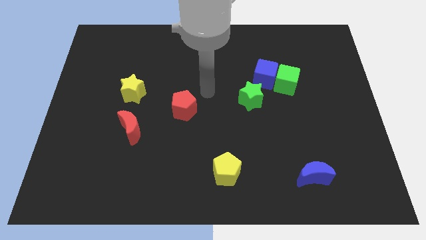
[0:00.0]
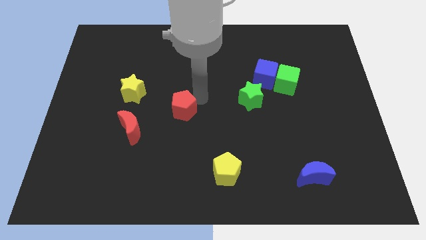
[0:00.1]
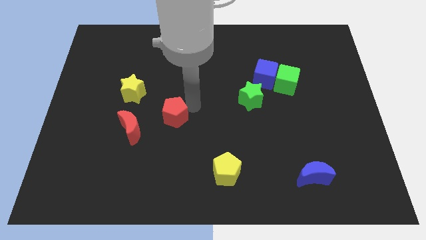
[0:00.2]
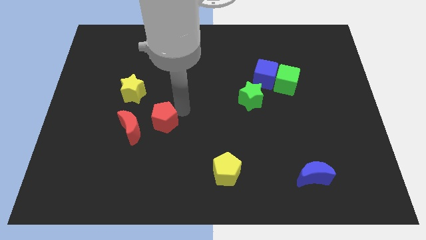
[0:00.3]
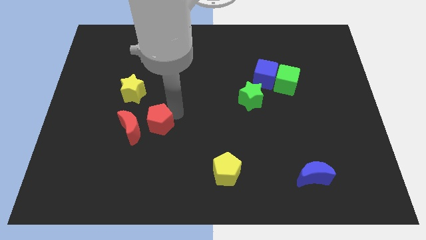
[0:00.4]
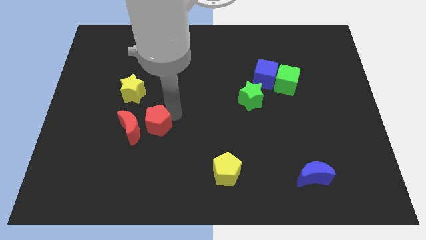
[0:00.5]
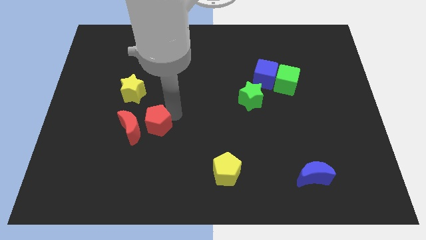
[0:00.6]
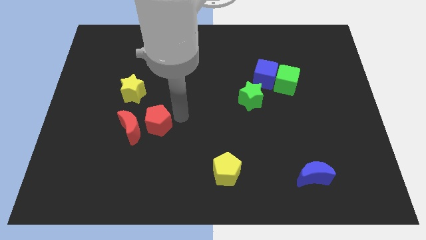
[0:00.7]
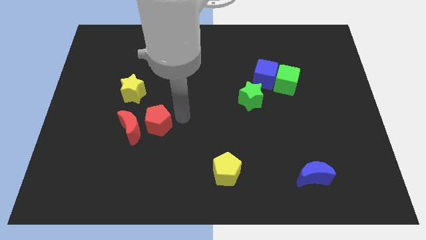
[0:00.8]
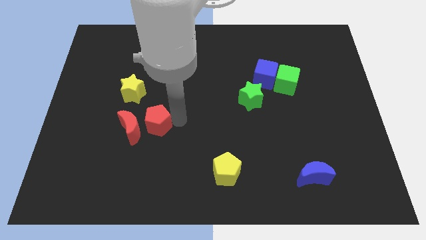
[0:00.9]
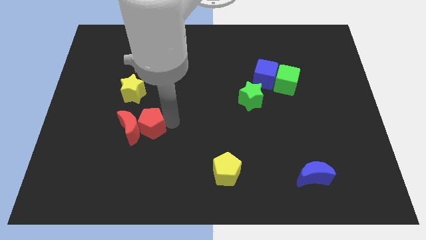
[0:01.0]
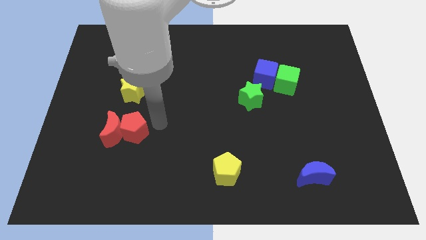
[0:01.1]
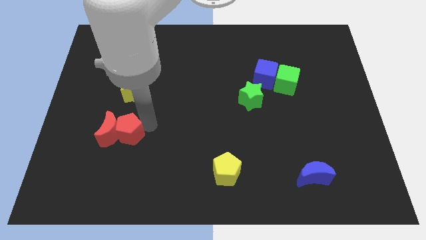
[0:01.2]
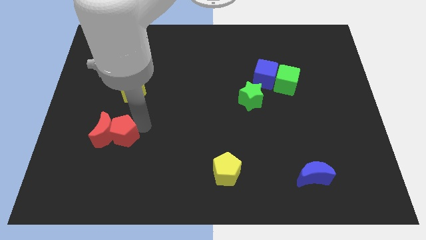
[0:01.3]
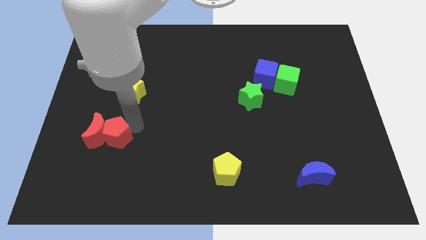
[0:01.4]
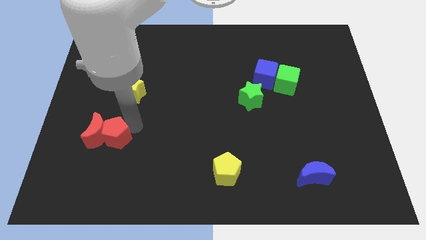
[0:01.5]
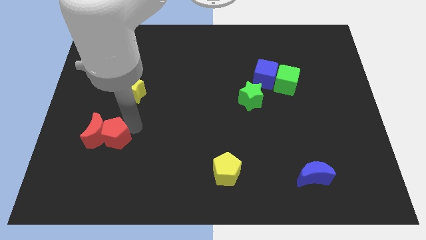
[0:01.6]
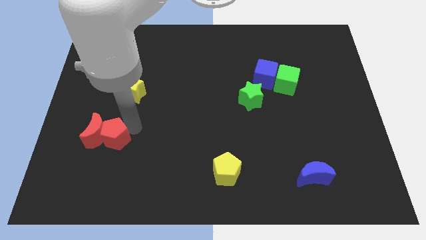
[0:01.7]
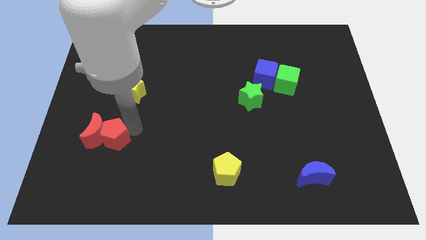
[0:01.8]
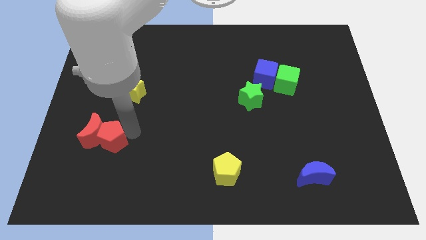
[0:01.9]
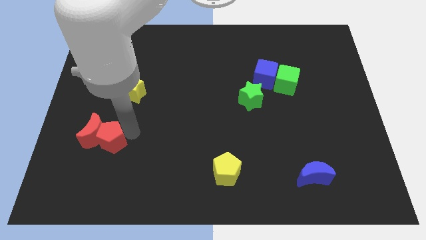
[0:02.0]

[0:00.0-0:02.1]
push the red pentagon into the red moon

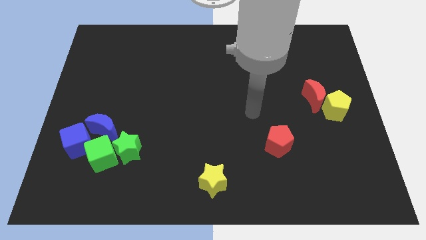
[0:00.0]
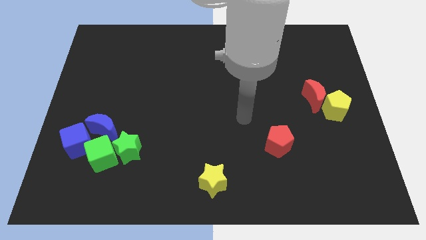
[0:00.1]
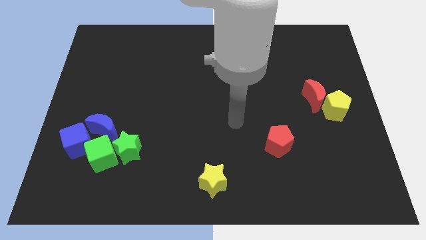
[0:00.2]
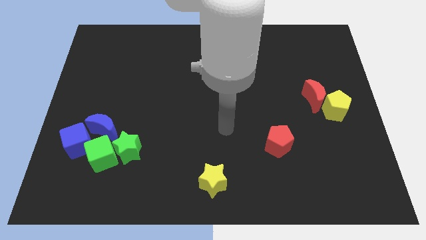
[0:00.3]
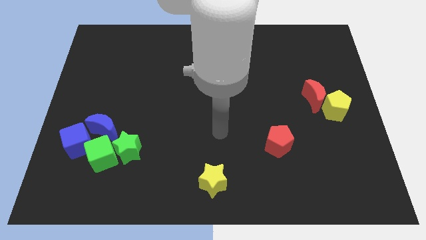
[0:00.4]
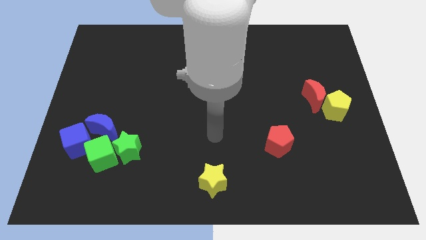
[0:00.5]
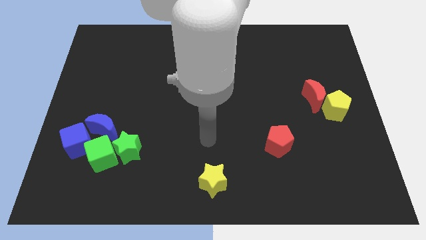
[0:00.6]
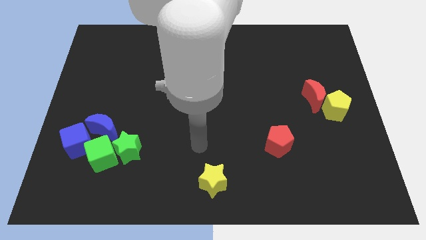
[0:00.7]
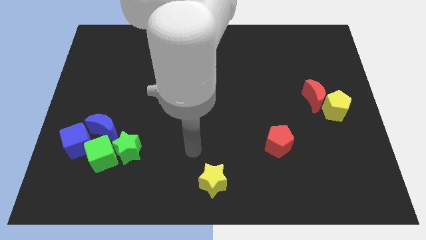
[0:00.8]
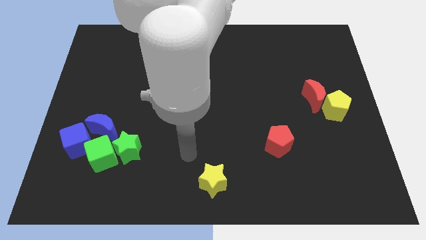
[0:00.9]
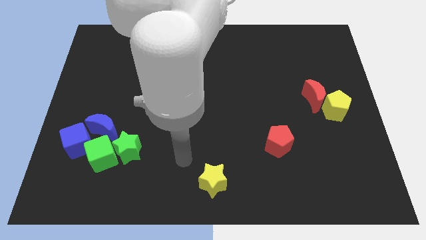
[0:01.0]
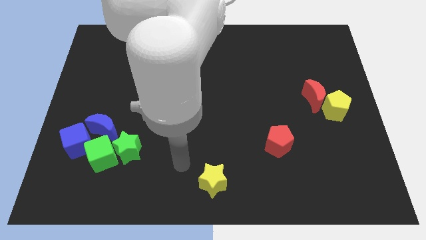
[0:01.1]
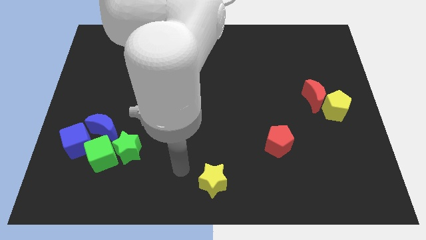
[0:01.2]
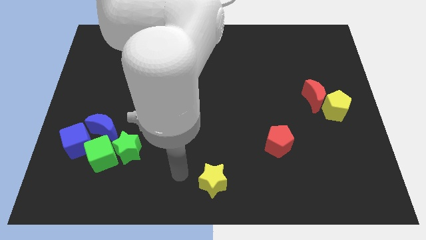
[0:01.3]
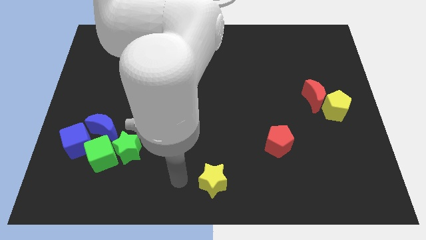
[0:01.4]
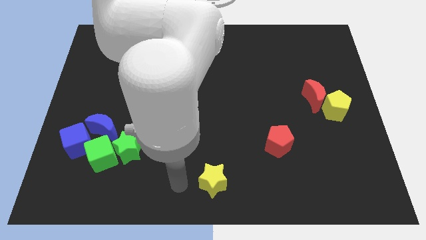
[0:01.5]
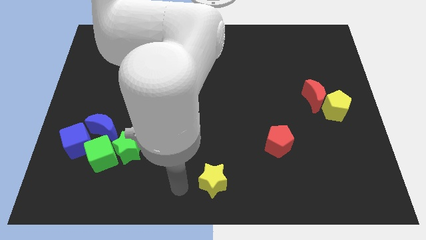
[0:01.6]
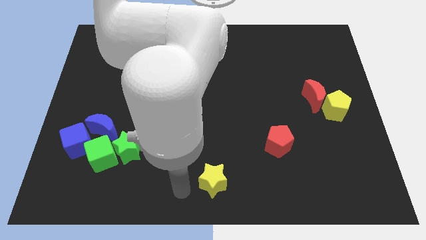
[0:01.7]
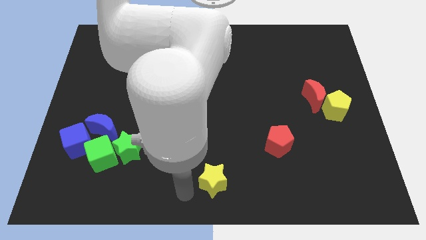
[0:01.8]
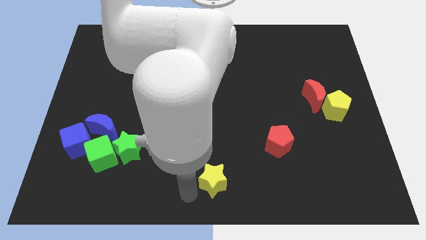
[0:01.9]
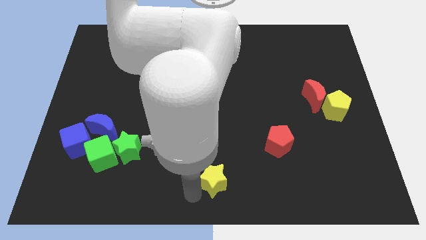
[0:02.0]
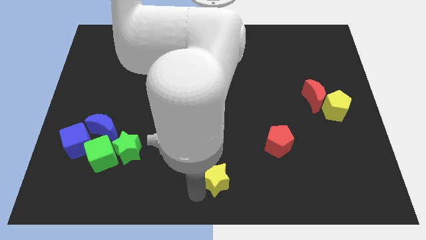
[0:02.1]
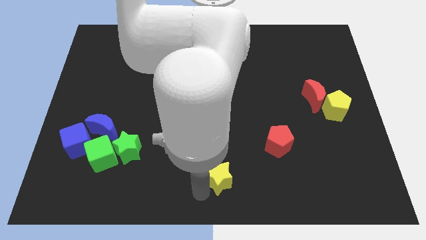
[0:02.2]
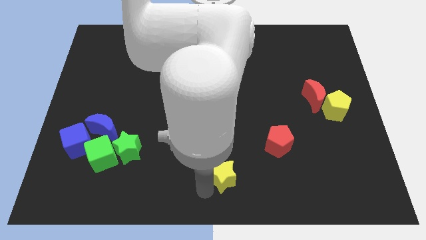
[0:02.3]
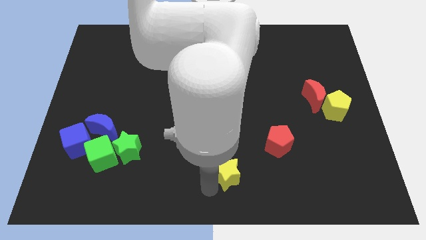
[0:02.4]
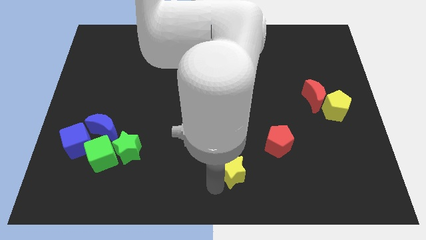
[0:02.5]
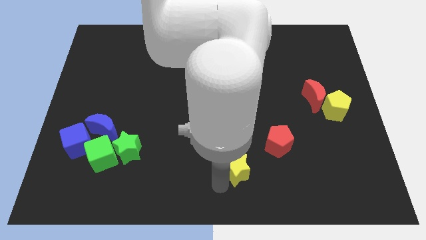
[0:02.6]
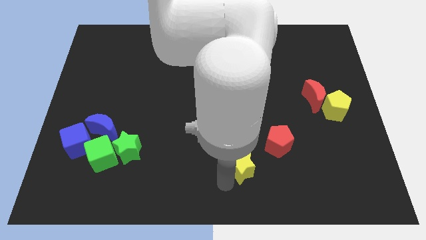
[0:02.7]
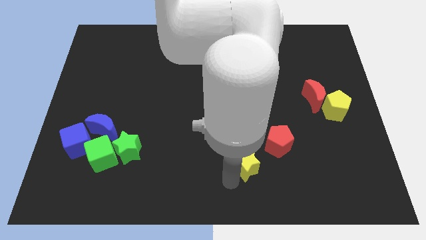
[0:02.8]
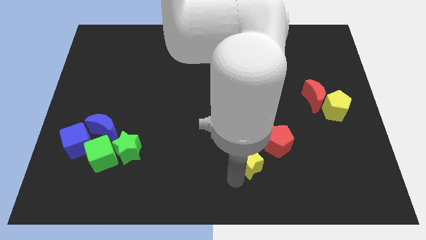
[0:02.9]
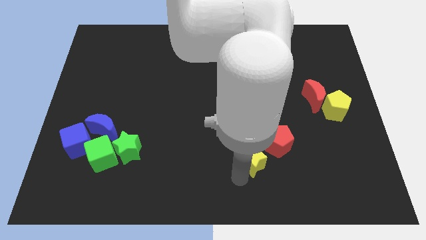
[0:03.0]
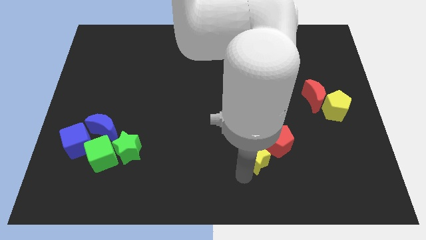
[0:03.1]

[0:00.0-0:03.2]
place the yellow star towards the bottom left side of the red pentagon

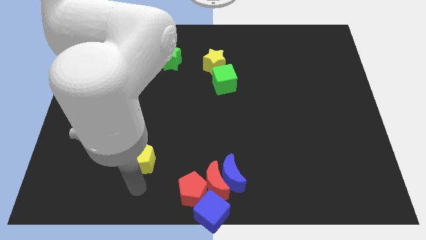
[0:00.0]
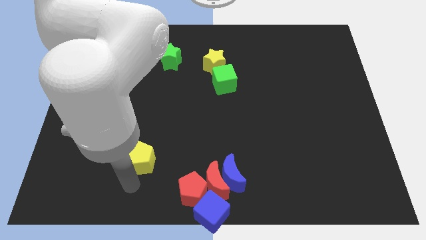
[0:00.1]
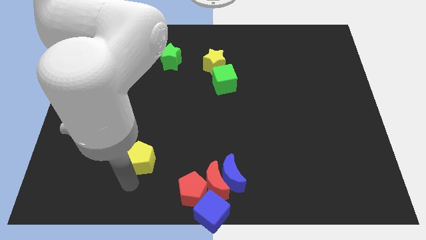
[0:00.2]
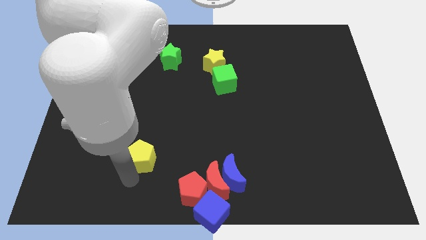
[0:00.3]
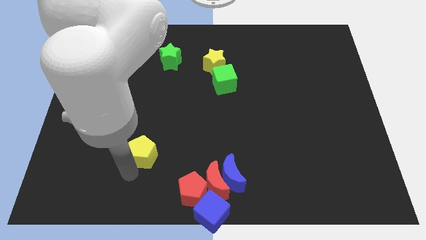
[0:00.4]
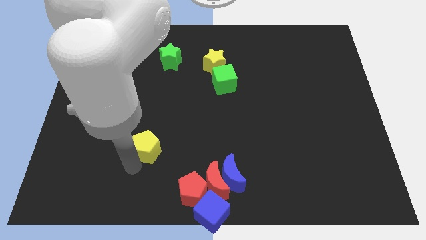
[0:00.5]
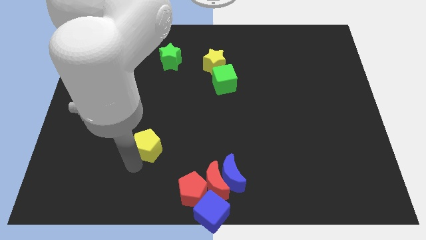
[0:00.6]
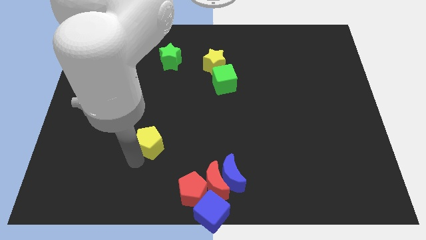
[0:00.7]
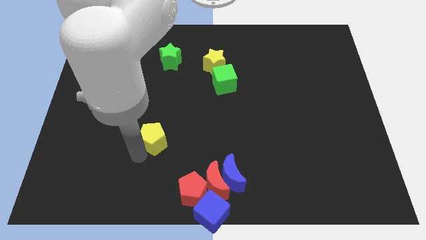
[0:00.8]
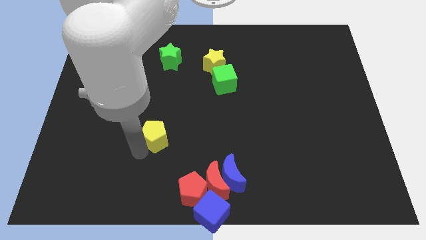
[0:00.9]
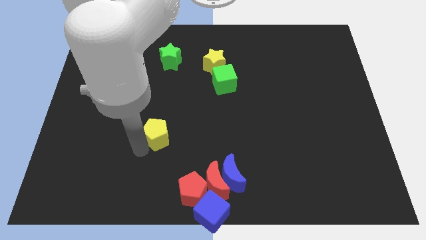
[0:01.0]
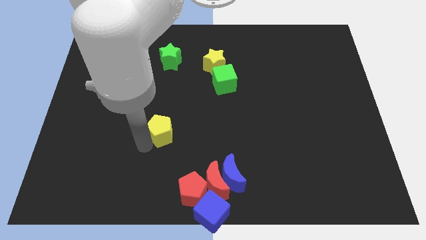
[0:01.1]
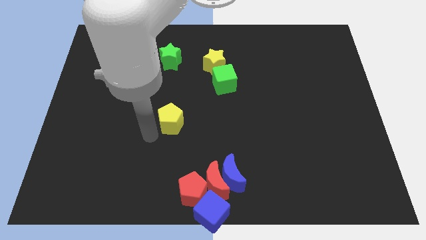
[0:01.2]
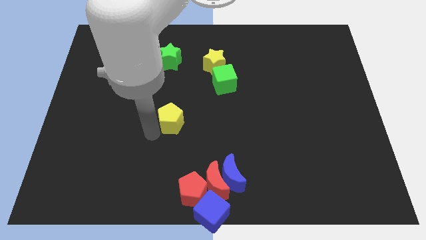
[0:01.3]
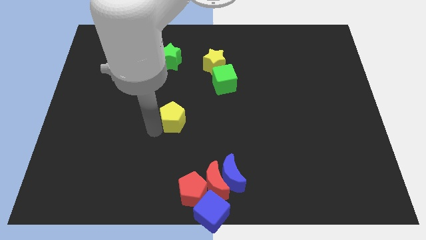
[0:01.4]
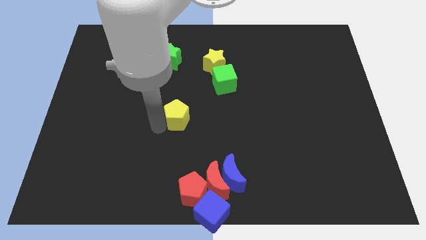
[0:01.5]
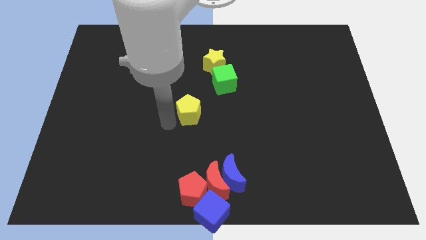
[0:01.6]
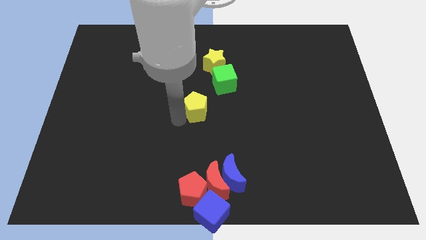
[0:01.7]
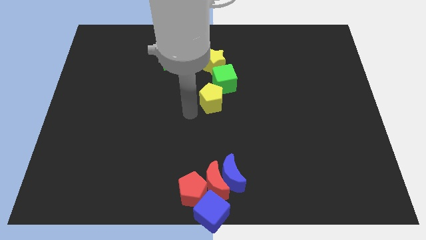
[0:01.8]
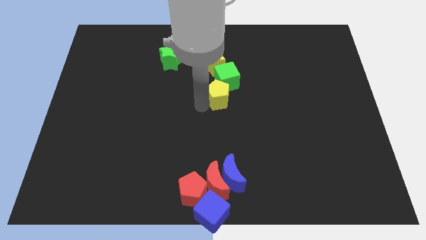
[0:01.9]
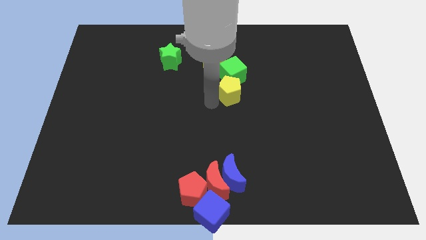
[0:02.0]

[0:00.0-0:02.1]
move the yellow pentagon to the bottom of the green cube

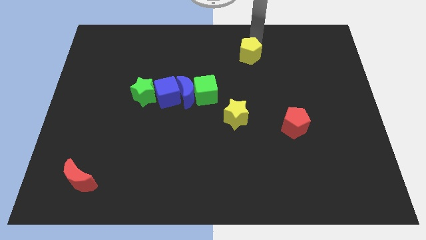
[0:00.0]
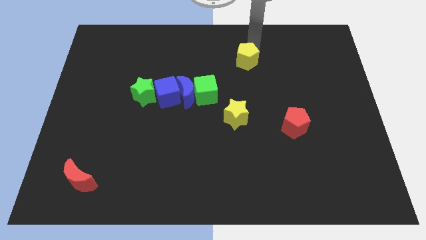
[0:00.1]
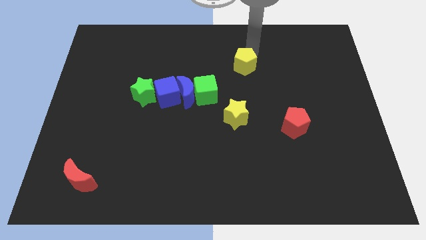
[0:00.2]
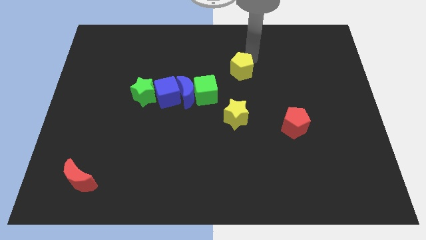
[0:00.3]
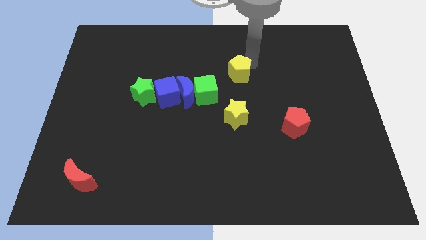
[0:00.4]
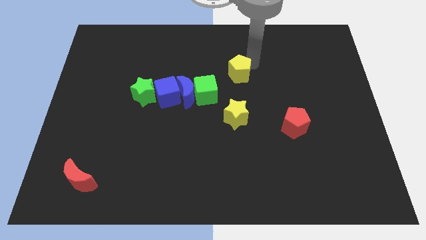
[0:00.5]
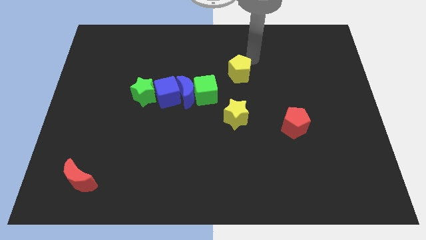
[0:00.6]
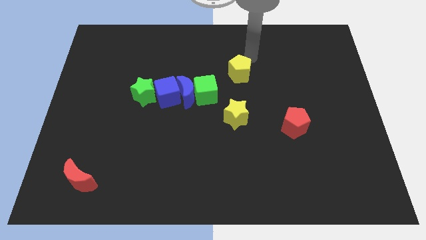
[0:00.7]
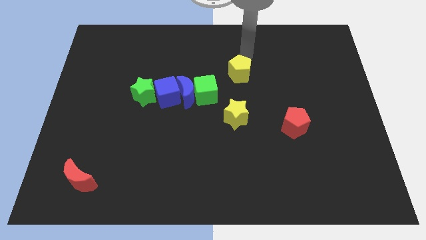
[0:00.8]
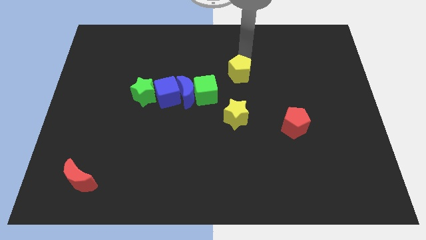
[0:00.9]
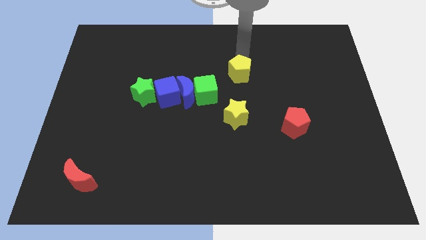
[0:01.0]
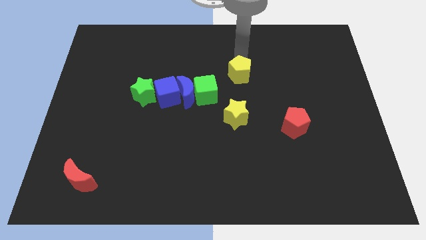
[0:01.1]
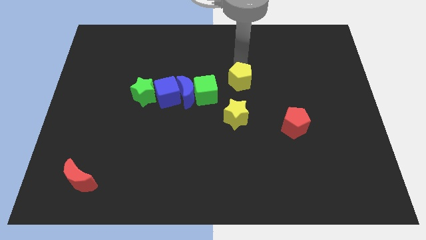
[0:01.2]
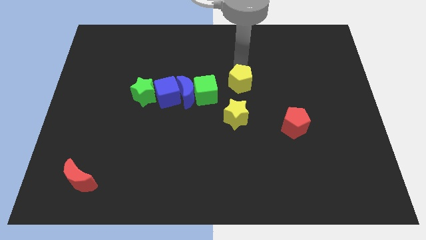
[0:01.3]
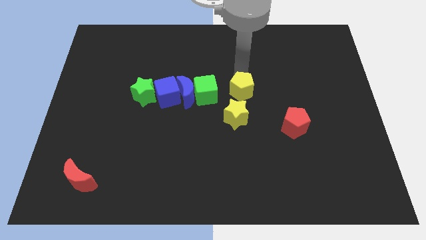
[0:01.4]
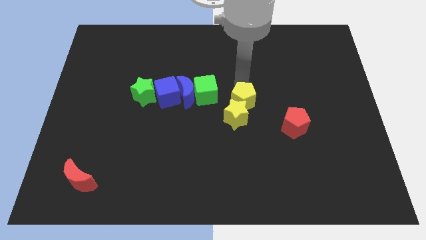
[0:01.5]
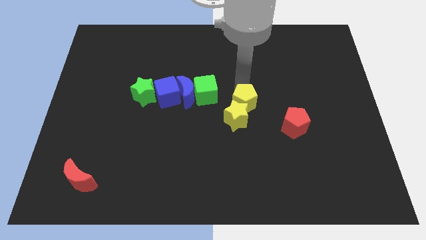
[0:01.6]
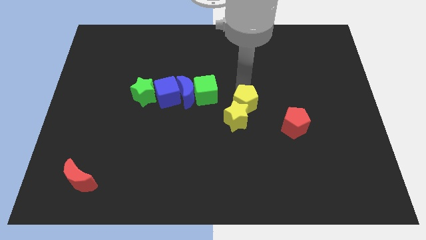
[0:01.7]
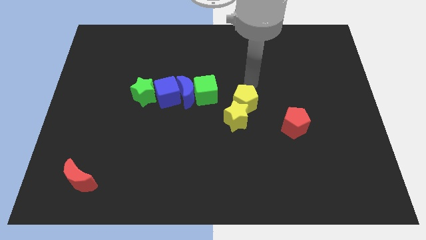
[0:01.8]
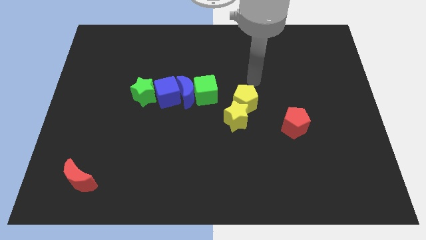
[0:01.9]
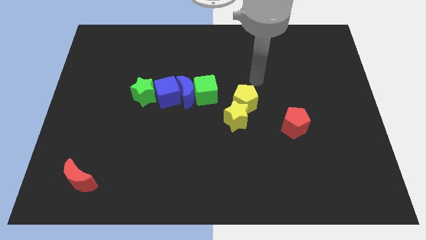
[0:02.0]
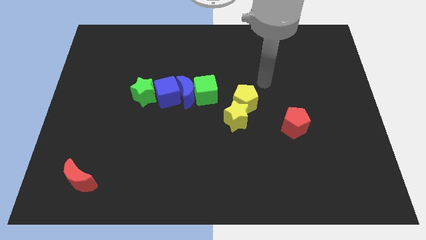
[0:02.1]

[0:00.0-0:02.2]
push the yellow pentagon into yellow star
